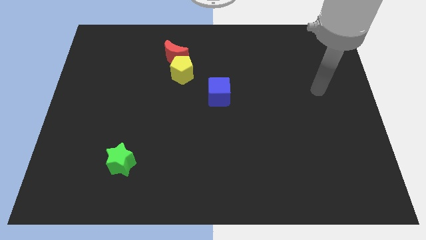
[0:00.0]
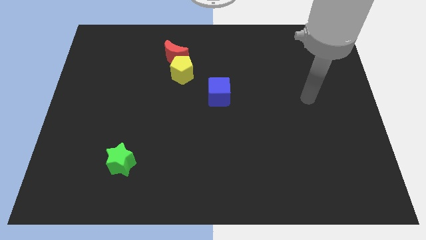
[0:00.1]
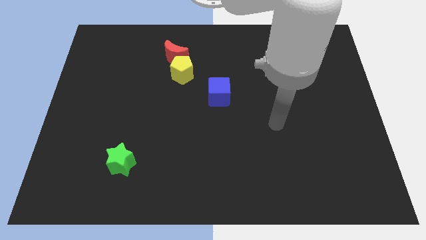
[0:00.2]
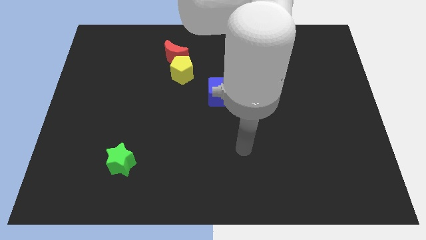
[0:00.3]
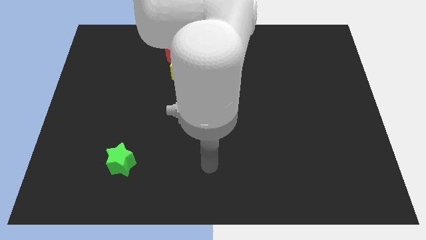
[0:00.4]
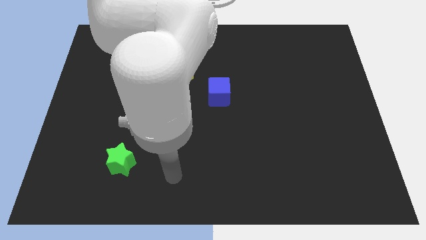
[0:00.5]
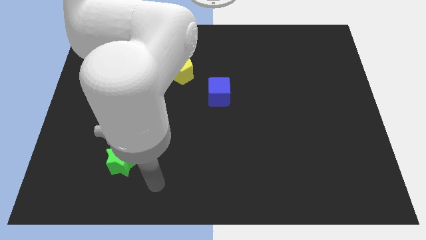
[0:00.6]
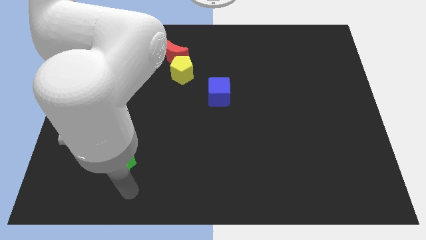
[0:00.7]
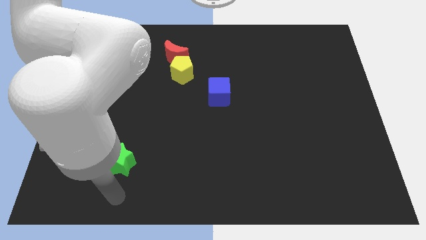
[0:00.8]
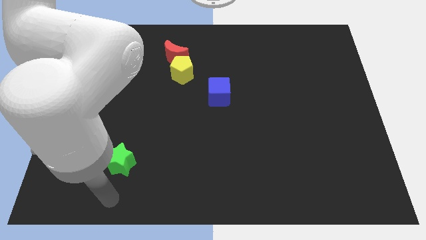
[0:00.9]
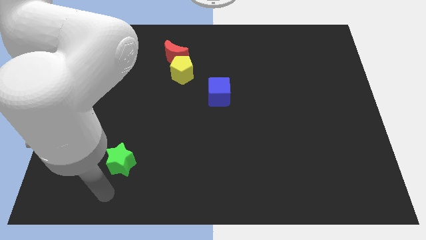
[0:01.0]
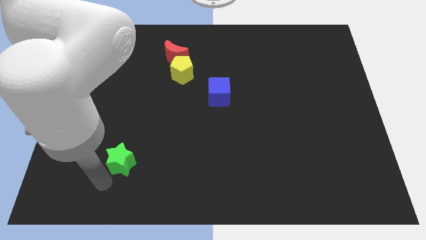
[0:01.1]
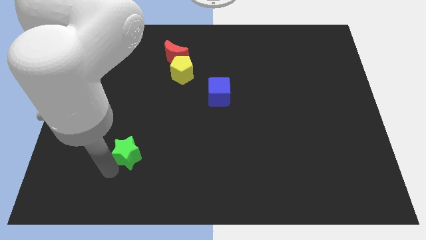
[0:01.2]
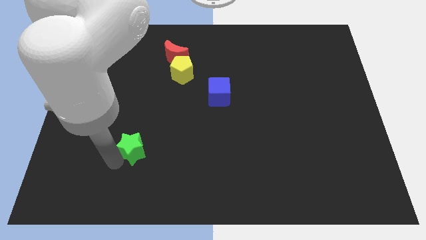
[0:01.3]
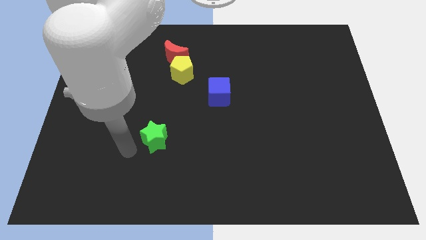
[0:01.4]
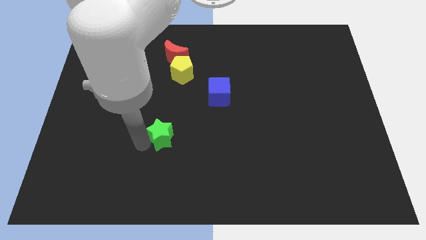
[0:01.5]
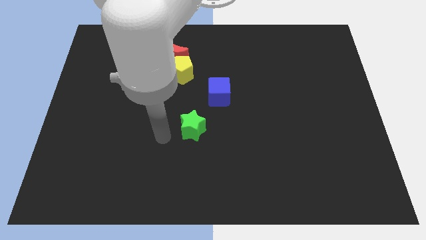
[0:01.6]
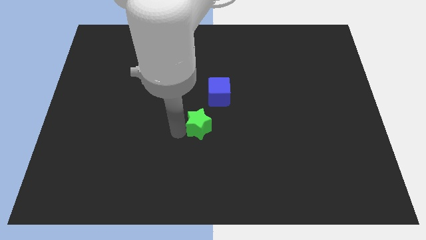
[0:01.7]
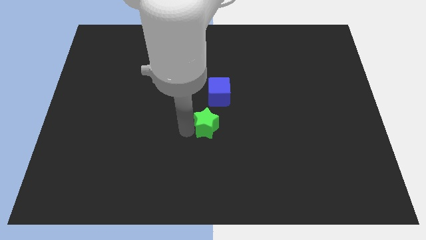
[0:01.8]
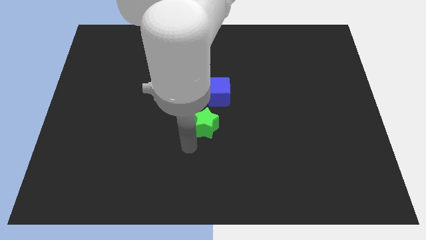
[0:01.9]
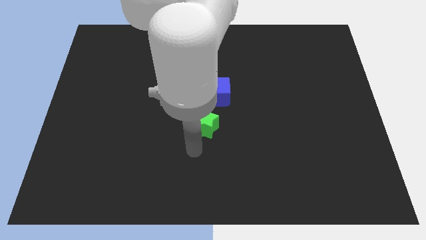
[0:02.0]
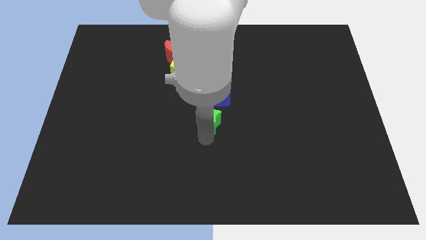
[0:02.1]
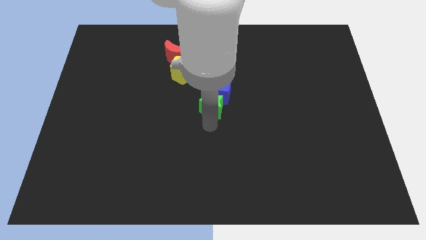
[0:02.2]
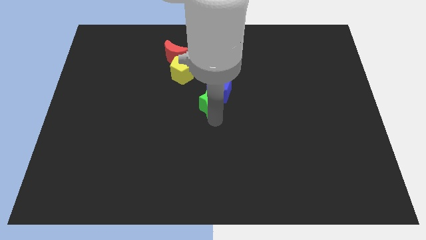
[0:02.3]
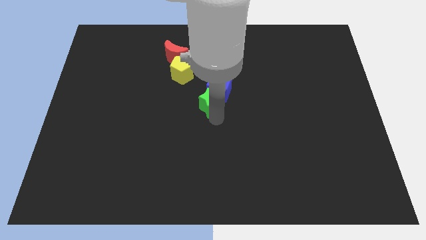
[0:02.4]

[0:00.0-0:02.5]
move the green star close to the blue cube

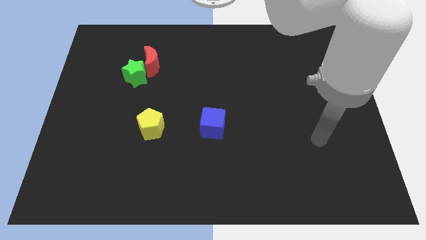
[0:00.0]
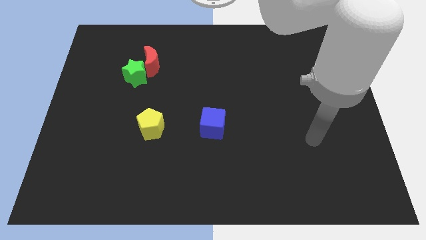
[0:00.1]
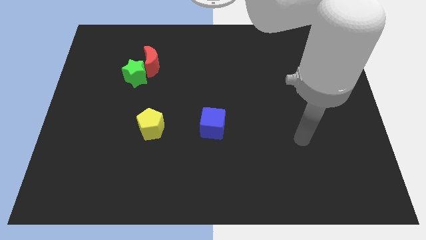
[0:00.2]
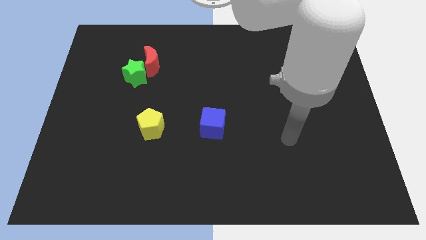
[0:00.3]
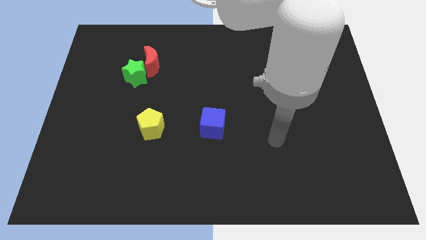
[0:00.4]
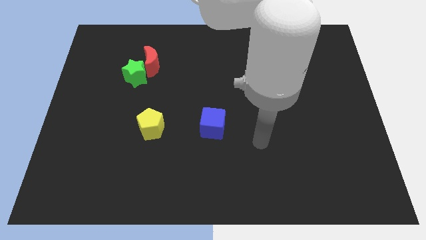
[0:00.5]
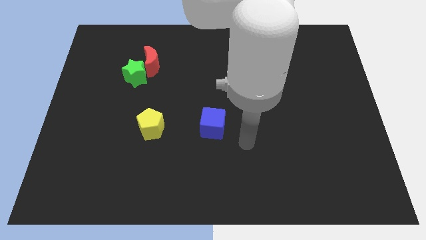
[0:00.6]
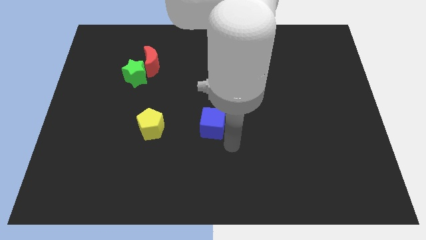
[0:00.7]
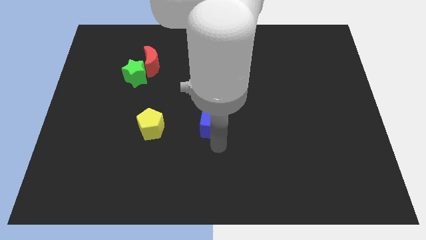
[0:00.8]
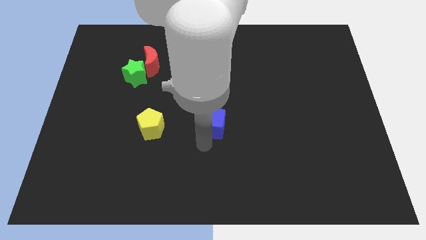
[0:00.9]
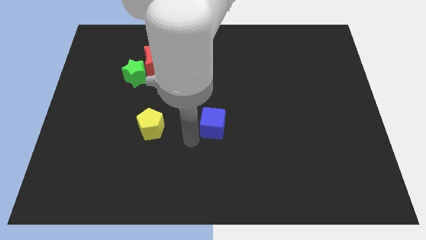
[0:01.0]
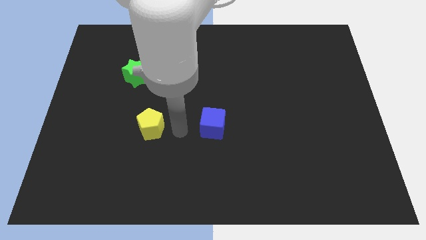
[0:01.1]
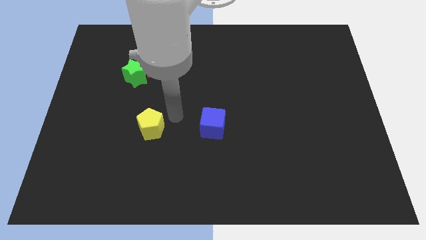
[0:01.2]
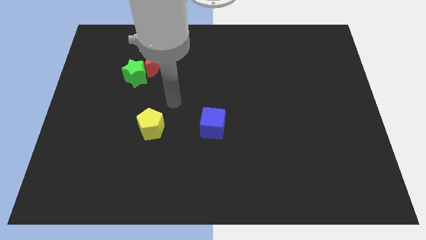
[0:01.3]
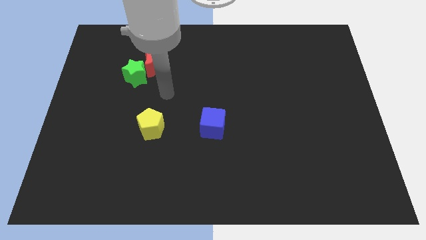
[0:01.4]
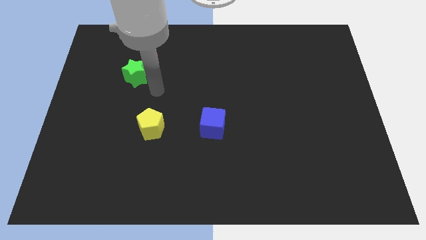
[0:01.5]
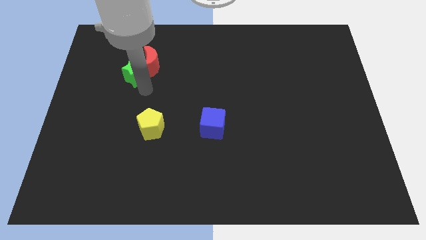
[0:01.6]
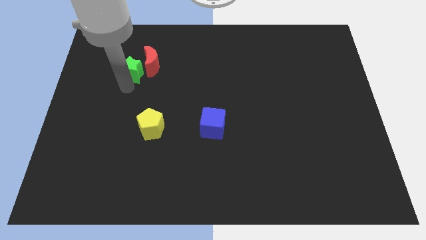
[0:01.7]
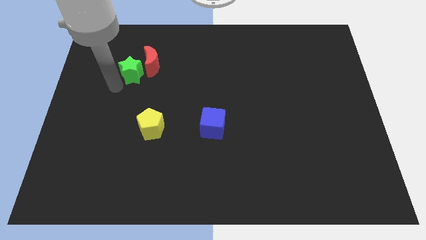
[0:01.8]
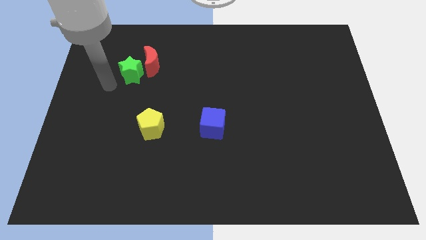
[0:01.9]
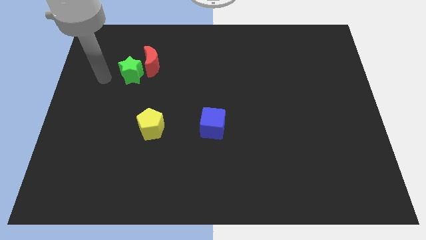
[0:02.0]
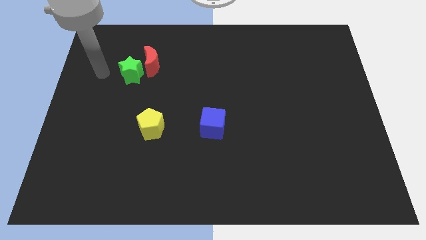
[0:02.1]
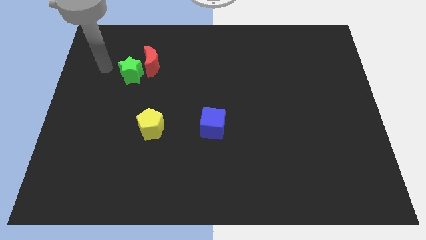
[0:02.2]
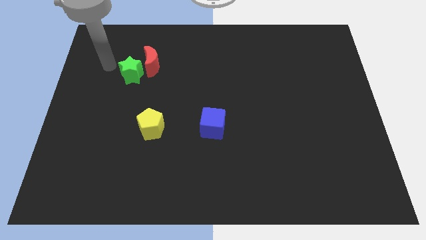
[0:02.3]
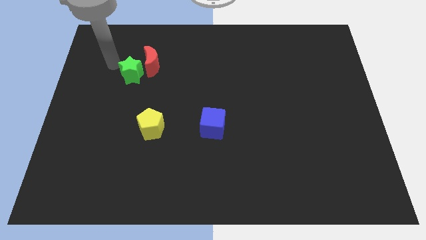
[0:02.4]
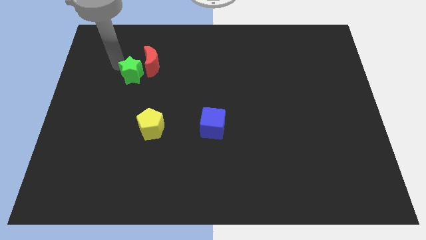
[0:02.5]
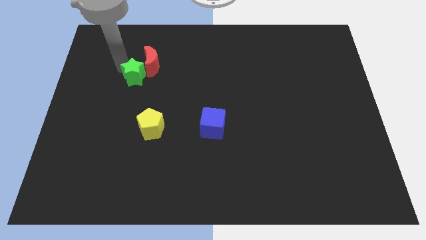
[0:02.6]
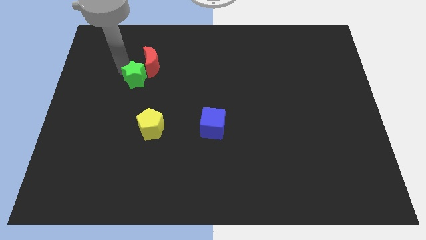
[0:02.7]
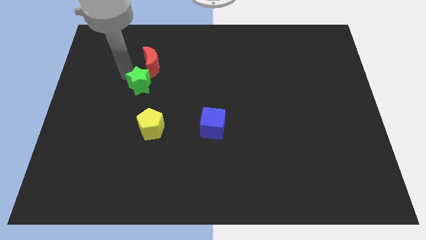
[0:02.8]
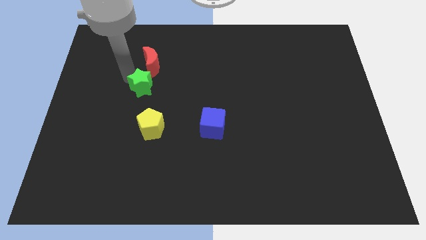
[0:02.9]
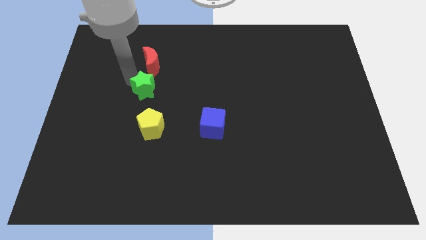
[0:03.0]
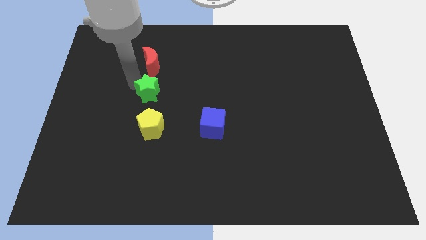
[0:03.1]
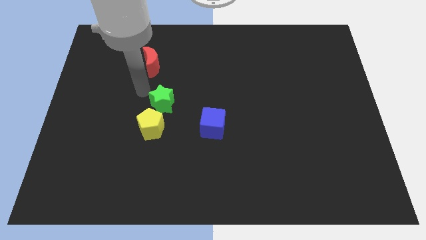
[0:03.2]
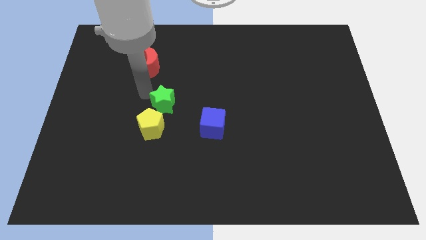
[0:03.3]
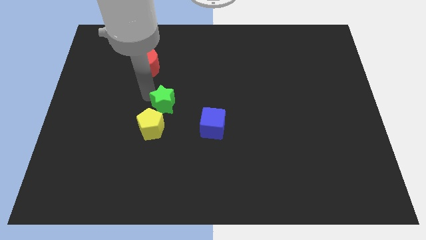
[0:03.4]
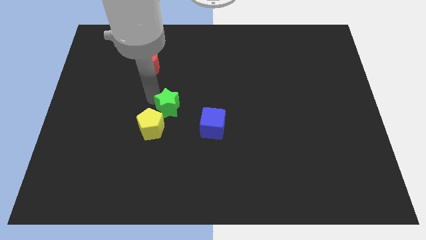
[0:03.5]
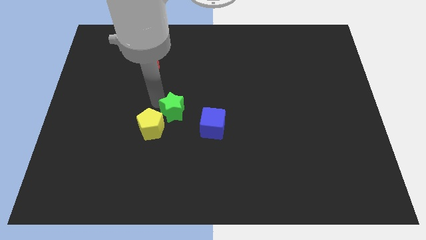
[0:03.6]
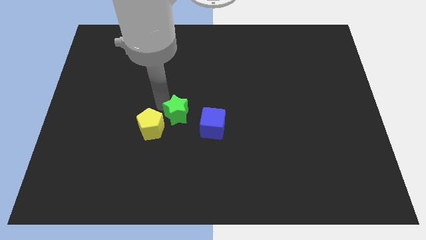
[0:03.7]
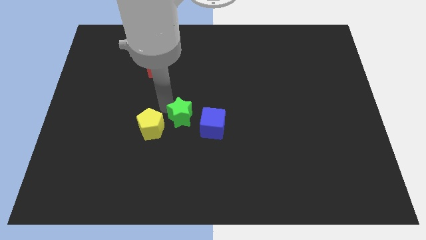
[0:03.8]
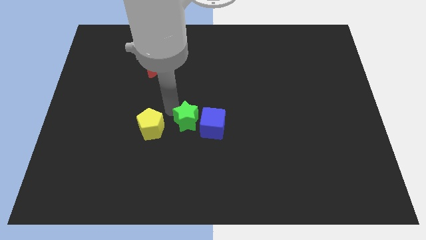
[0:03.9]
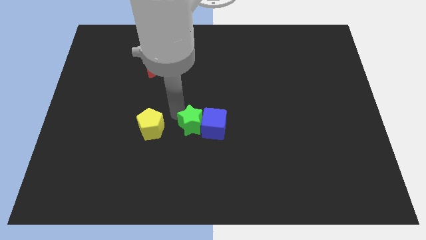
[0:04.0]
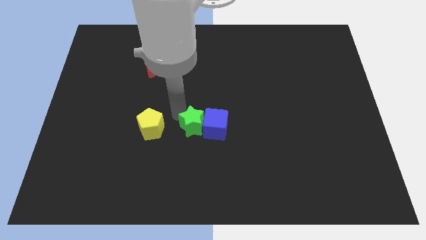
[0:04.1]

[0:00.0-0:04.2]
move the green block towards the cube

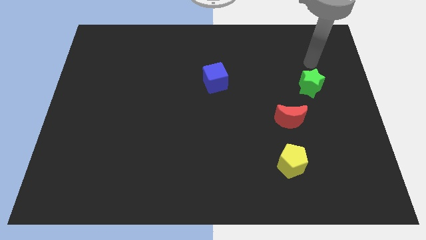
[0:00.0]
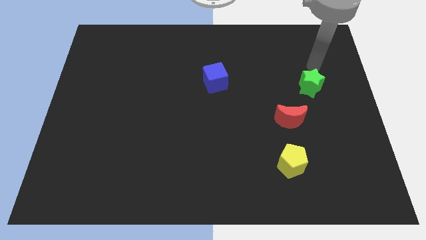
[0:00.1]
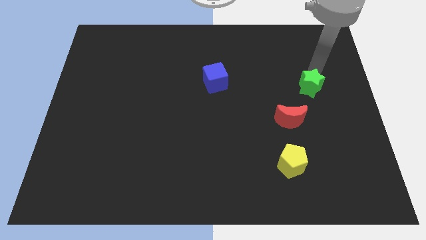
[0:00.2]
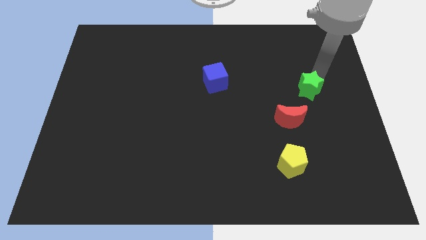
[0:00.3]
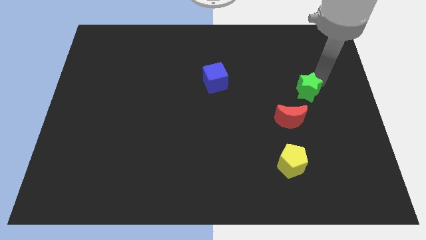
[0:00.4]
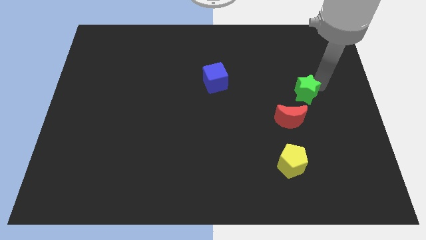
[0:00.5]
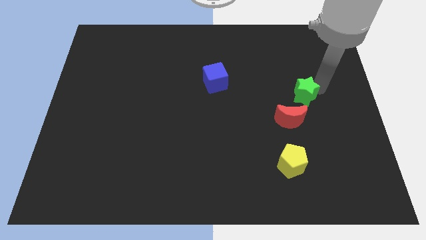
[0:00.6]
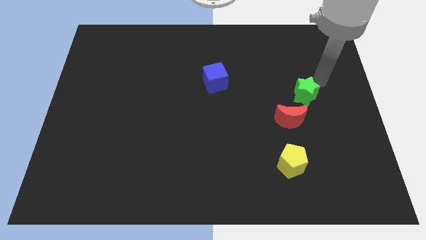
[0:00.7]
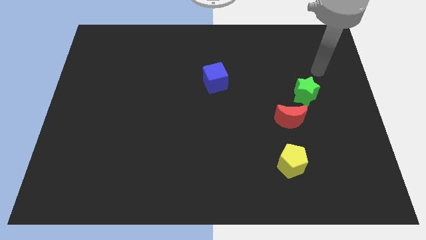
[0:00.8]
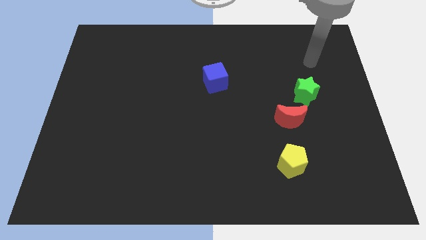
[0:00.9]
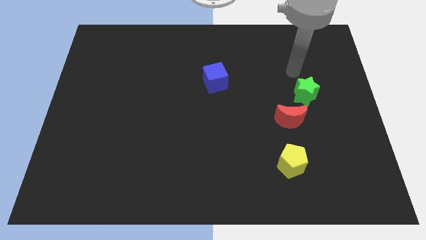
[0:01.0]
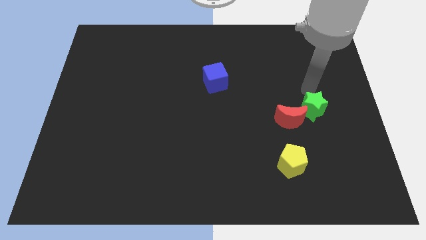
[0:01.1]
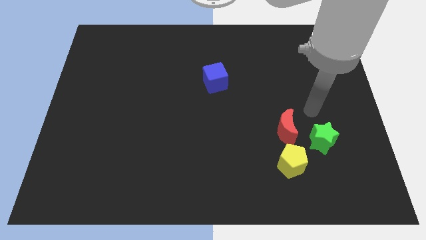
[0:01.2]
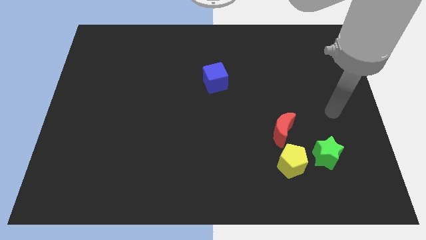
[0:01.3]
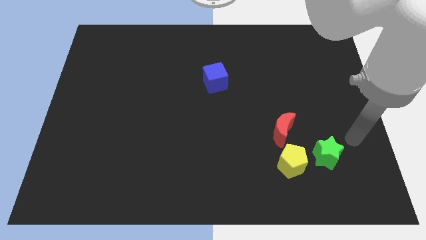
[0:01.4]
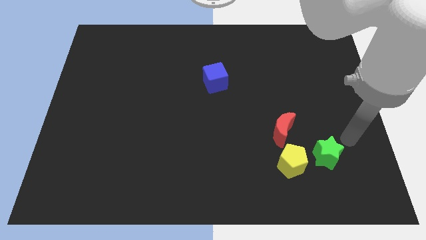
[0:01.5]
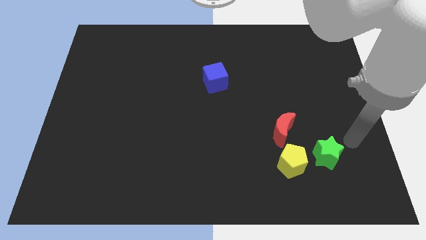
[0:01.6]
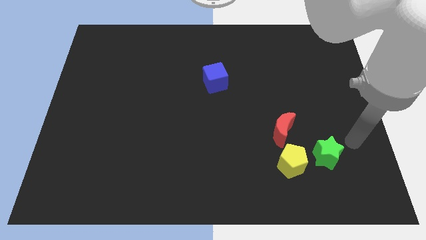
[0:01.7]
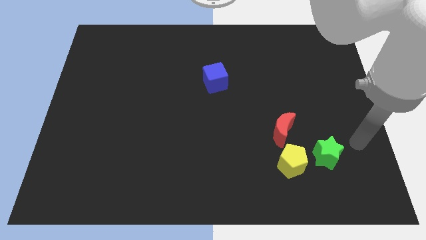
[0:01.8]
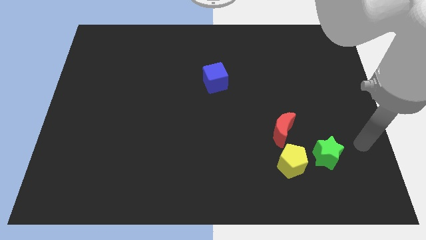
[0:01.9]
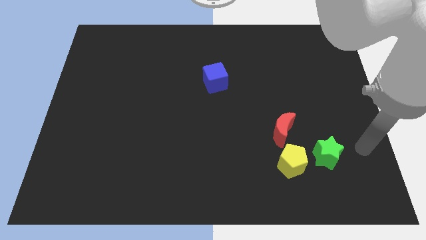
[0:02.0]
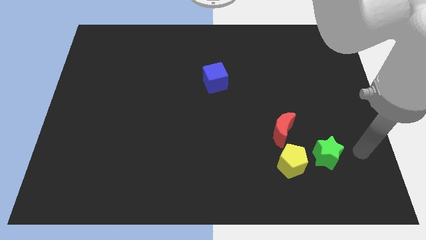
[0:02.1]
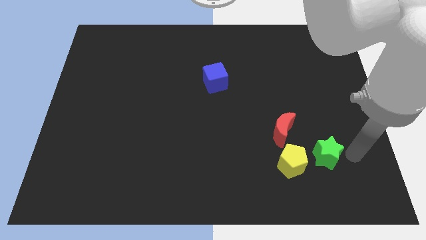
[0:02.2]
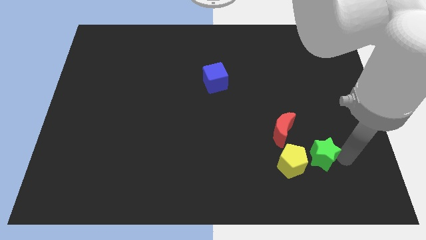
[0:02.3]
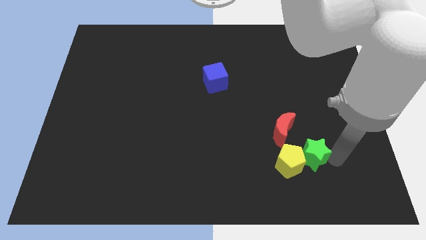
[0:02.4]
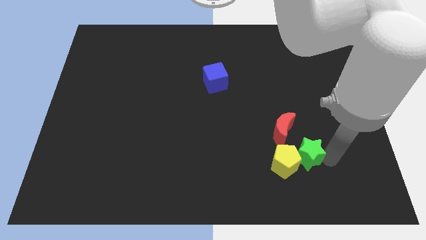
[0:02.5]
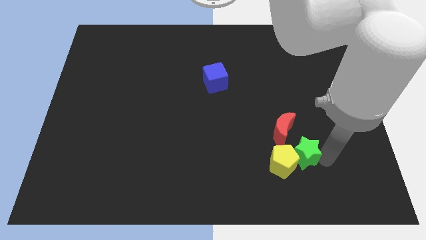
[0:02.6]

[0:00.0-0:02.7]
move the star close to the pentagon
